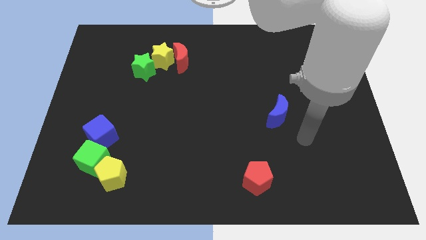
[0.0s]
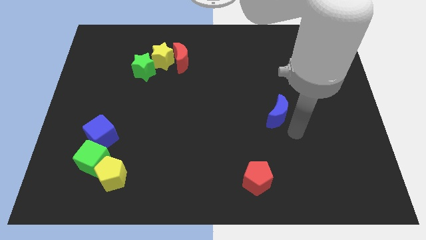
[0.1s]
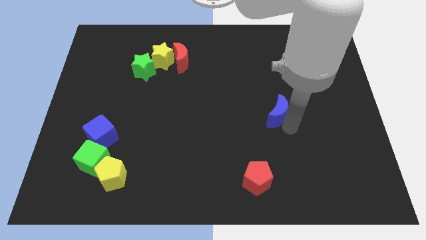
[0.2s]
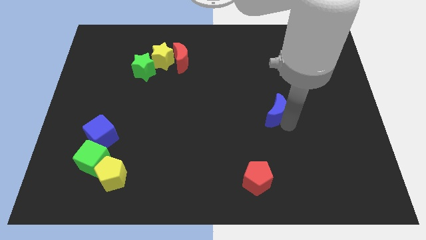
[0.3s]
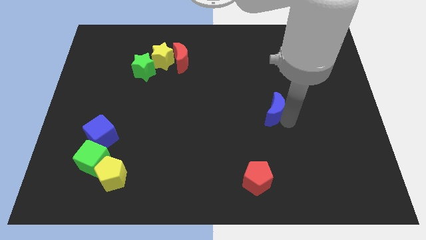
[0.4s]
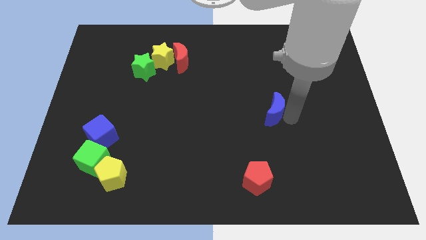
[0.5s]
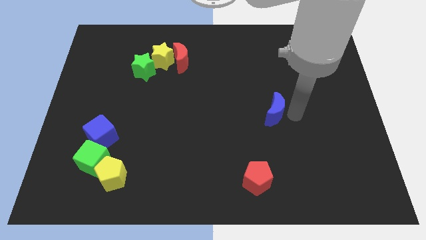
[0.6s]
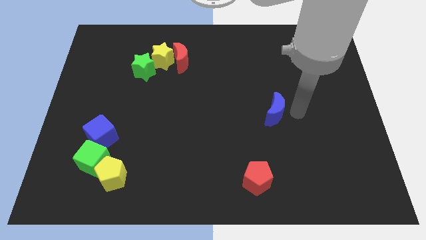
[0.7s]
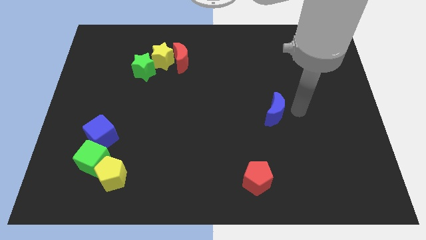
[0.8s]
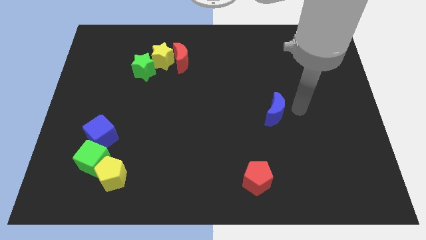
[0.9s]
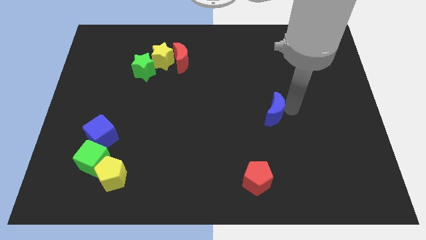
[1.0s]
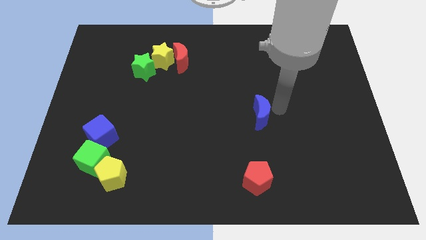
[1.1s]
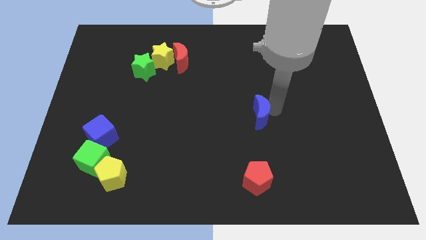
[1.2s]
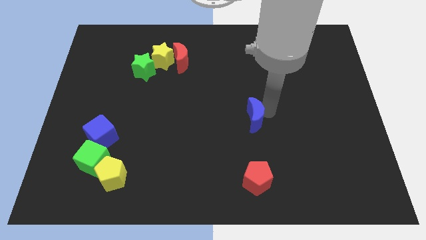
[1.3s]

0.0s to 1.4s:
place the blue moon vertically above the red pentagon

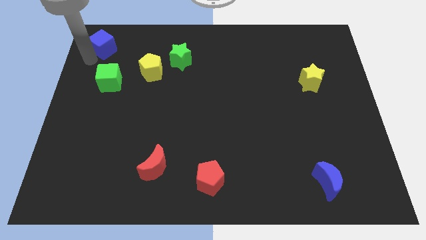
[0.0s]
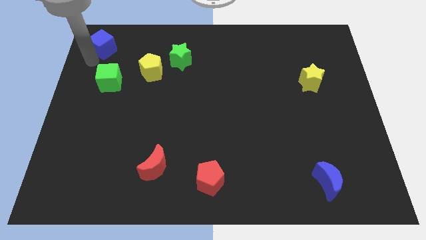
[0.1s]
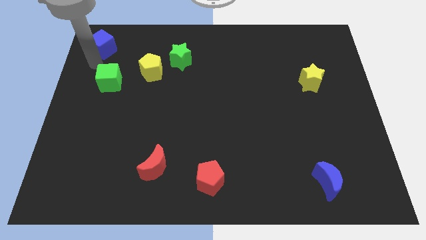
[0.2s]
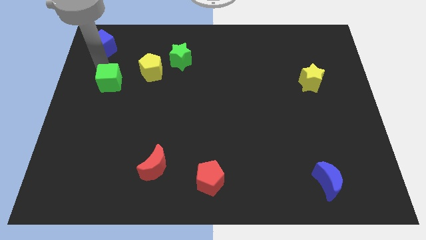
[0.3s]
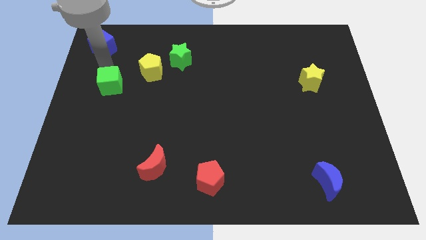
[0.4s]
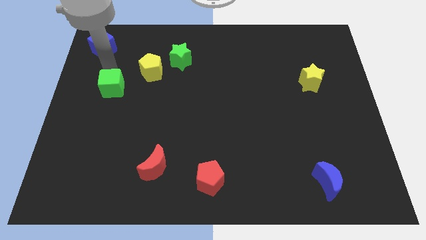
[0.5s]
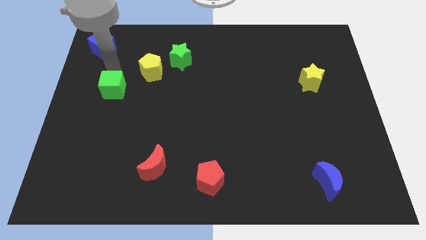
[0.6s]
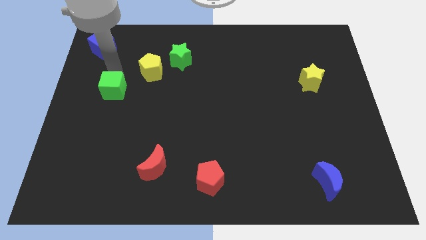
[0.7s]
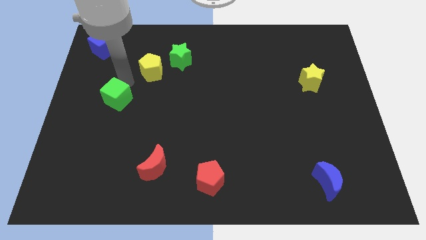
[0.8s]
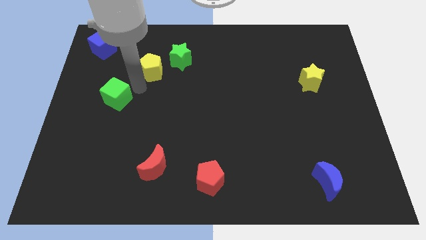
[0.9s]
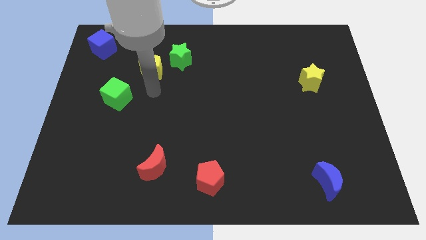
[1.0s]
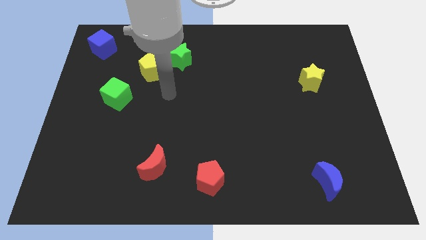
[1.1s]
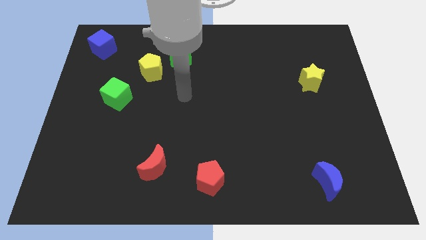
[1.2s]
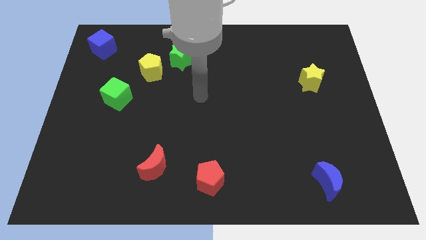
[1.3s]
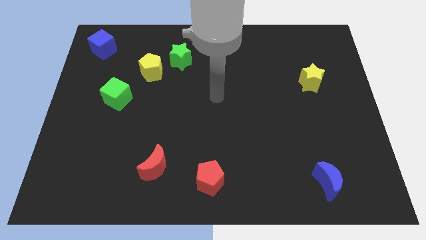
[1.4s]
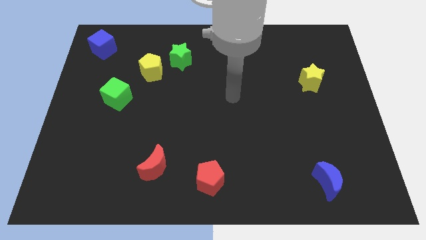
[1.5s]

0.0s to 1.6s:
push the green cube downwards

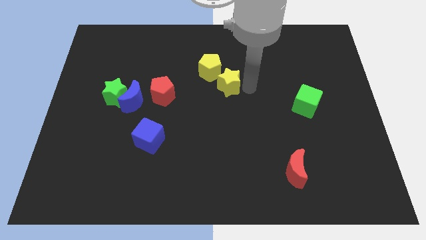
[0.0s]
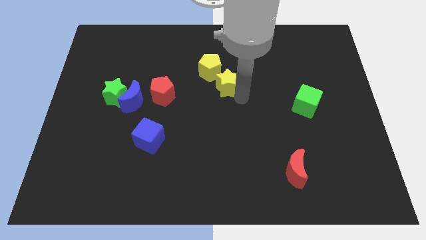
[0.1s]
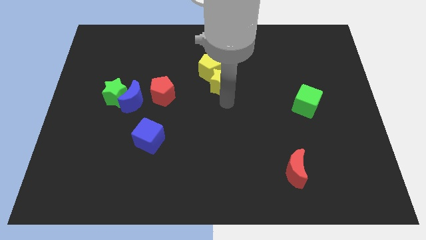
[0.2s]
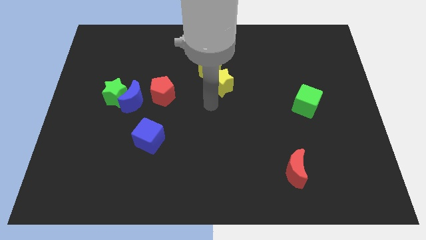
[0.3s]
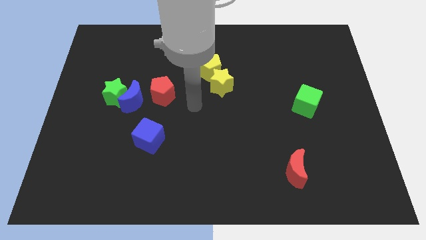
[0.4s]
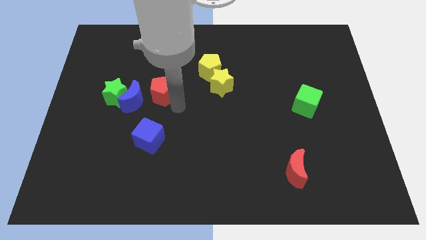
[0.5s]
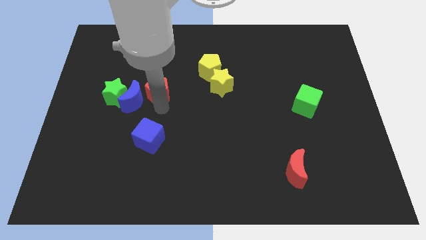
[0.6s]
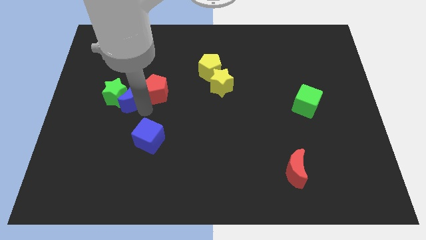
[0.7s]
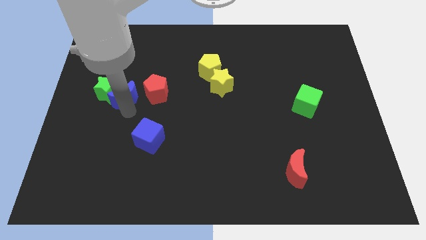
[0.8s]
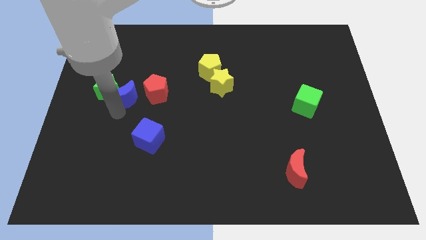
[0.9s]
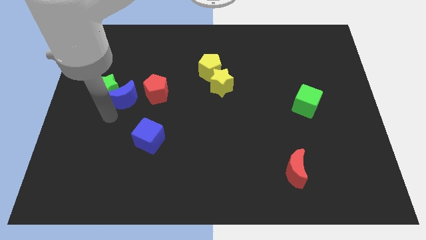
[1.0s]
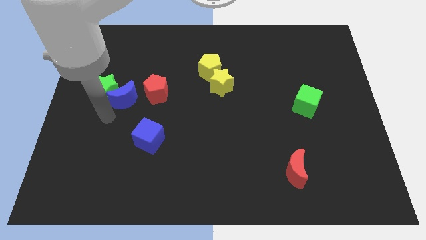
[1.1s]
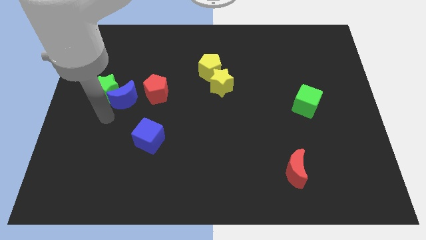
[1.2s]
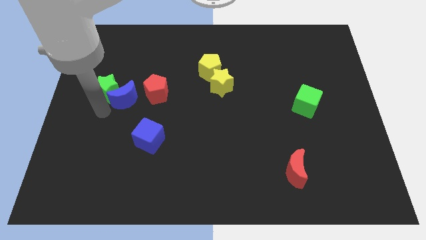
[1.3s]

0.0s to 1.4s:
move the yellow star to the bottom right side of the yellow pentagon

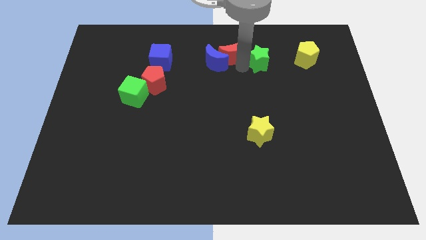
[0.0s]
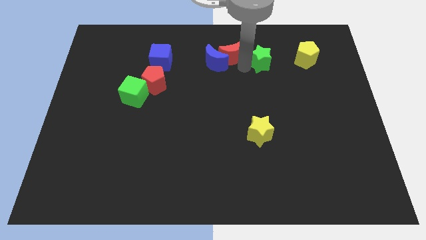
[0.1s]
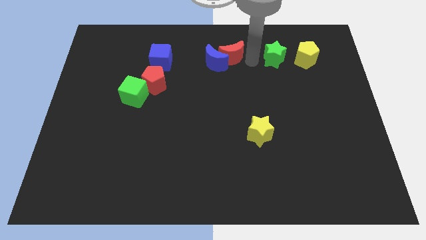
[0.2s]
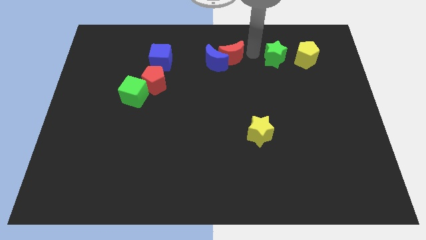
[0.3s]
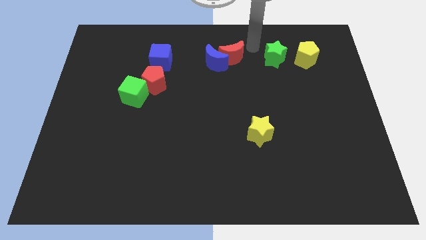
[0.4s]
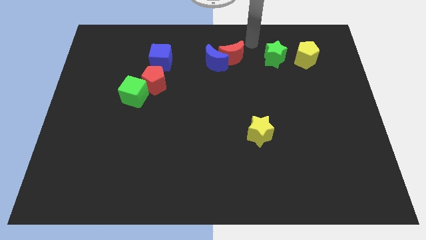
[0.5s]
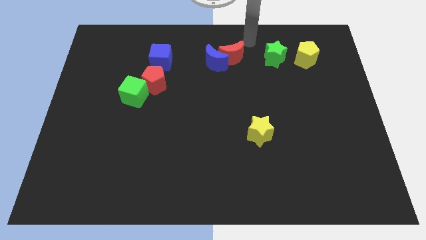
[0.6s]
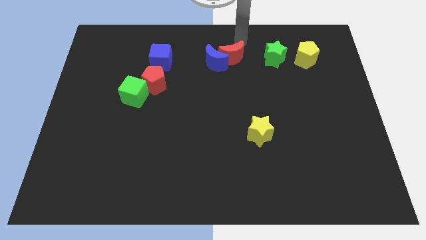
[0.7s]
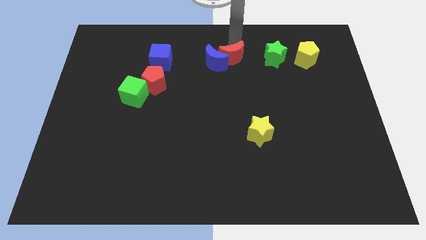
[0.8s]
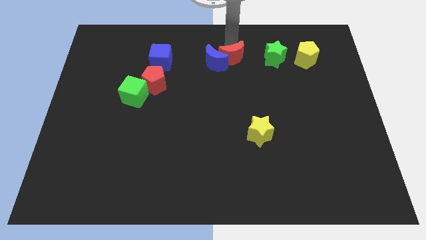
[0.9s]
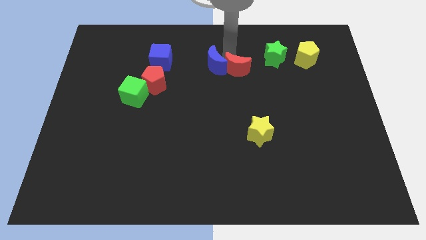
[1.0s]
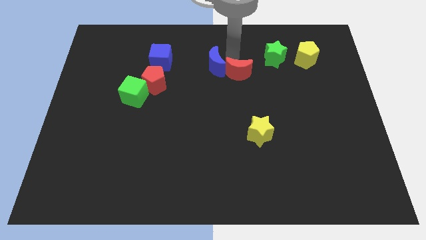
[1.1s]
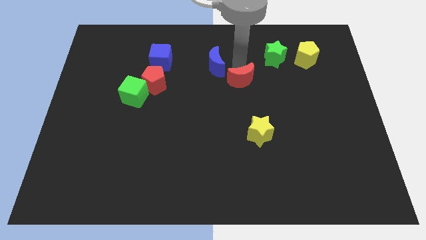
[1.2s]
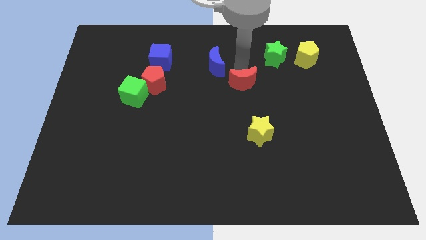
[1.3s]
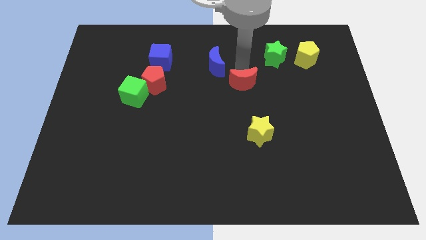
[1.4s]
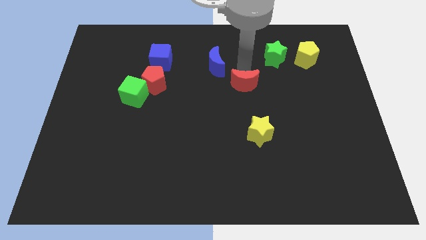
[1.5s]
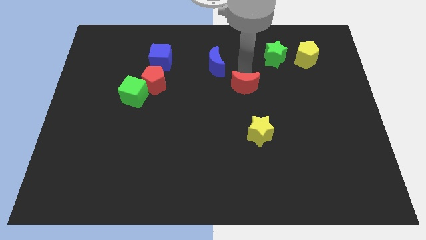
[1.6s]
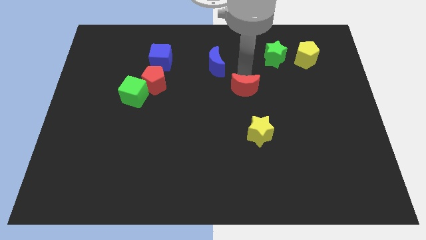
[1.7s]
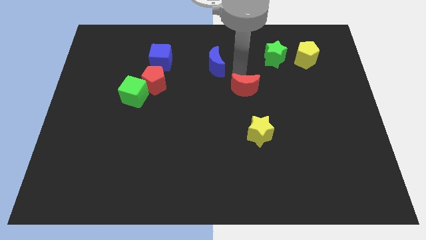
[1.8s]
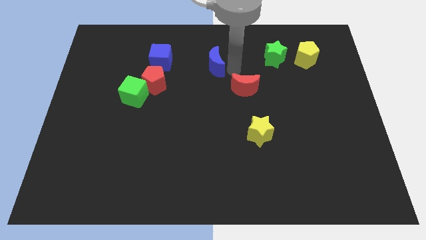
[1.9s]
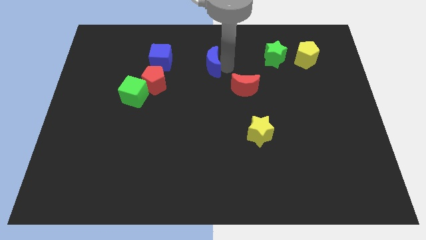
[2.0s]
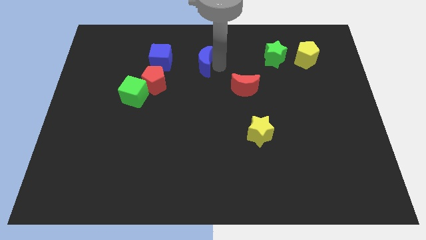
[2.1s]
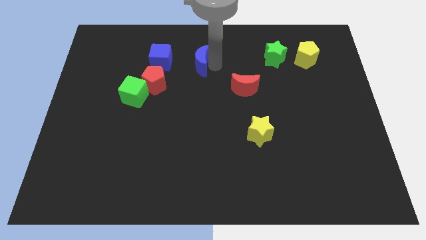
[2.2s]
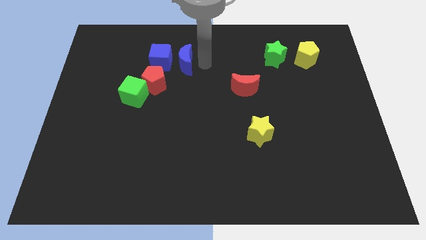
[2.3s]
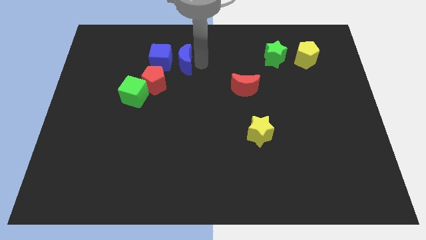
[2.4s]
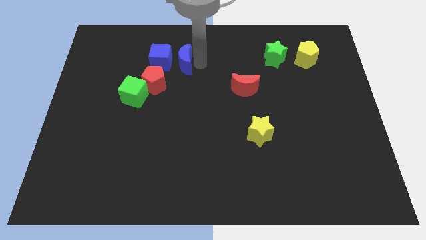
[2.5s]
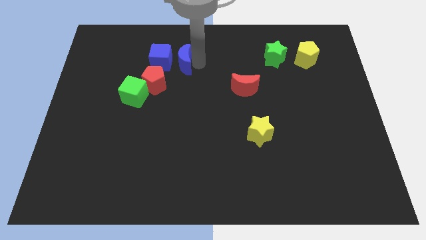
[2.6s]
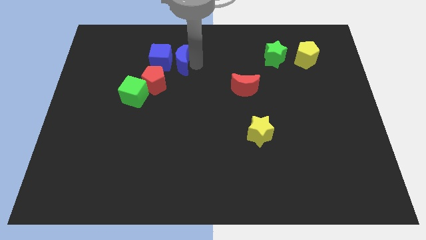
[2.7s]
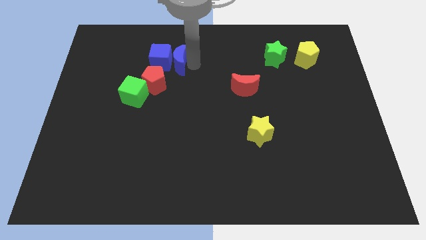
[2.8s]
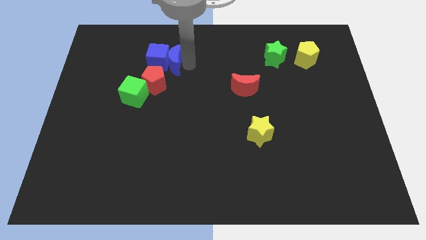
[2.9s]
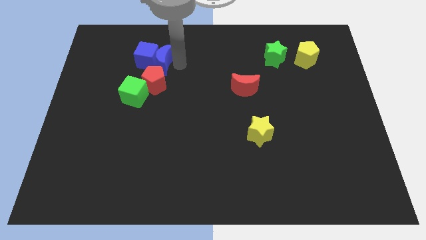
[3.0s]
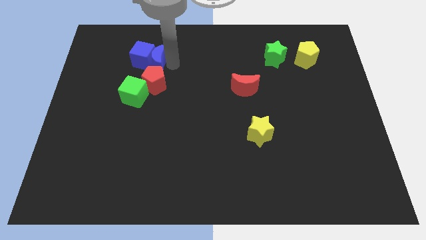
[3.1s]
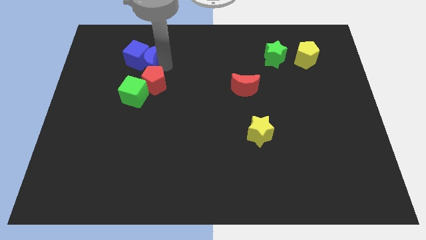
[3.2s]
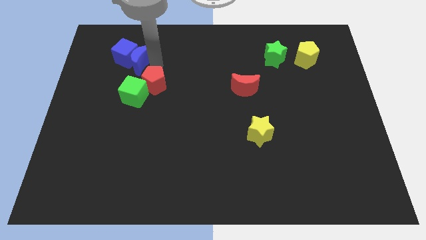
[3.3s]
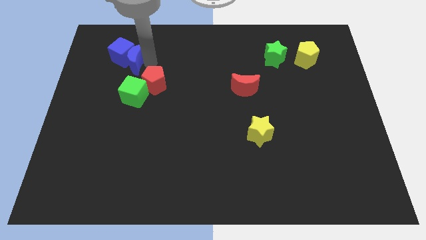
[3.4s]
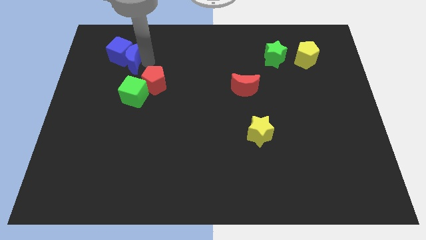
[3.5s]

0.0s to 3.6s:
move the red moon above the yellow star

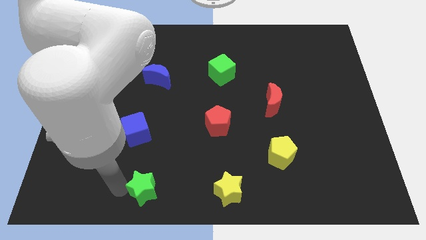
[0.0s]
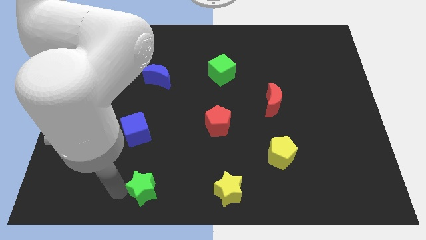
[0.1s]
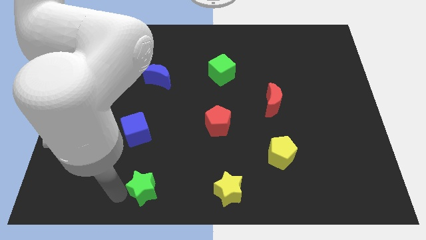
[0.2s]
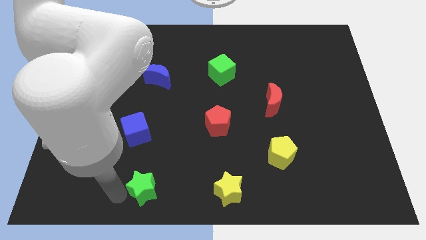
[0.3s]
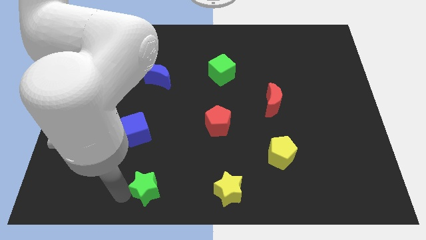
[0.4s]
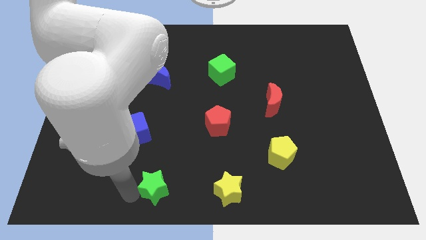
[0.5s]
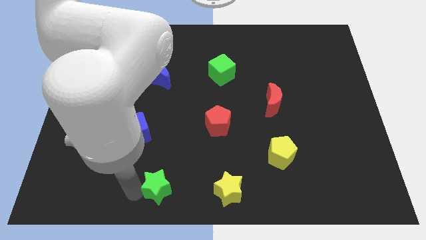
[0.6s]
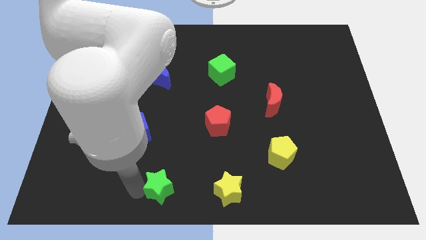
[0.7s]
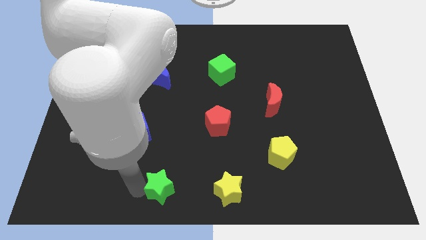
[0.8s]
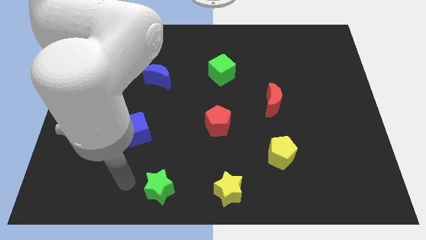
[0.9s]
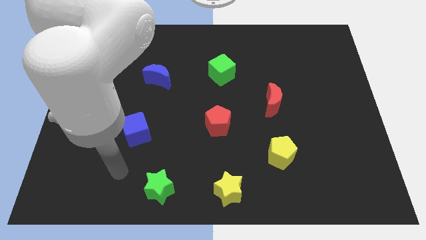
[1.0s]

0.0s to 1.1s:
push the green star horizontally to the left side of the yellow star

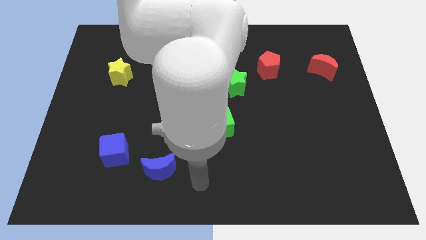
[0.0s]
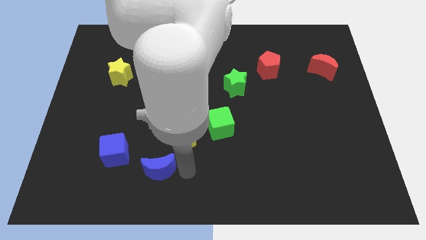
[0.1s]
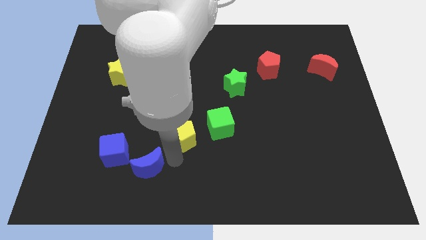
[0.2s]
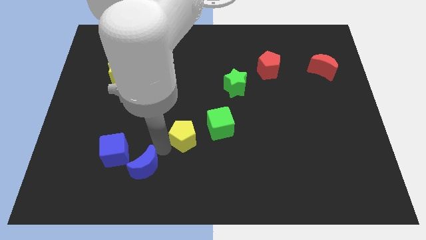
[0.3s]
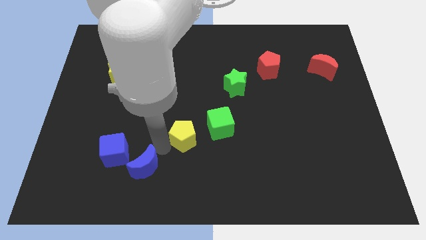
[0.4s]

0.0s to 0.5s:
push the blue crescent towards the left side of the board
